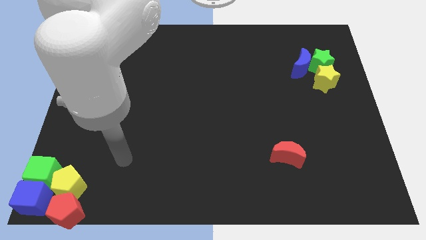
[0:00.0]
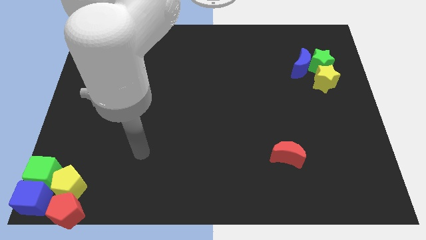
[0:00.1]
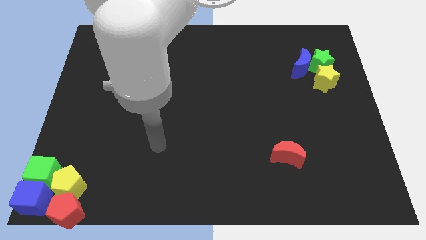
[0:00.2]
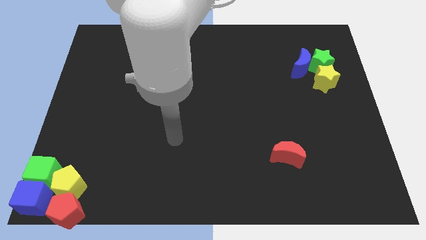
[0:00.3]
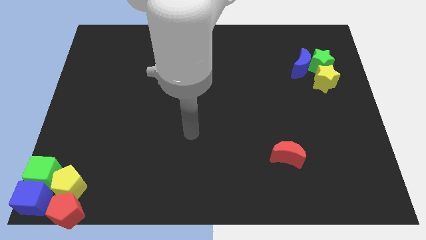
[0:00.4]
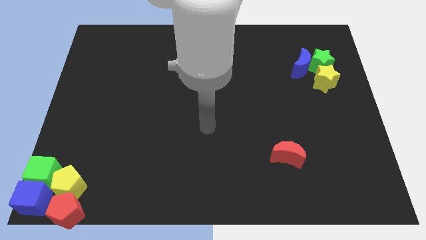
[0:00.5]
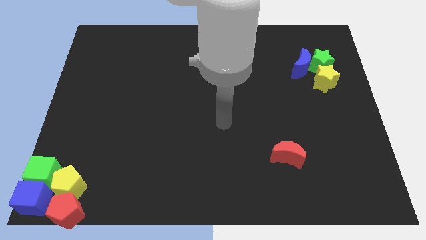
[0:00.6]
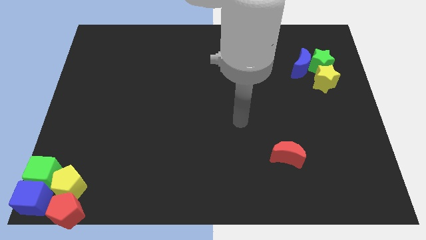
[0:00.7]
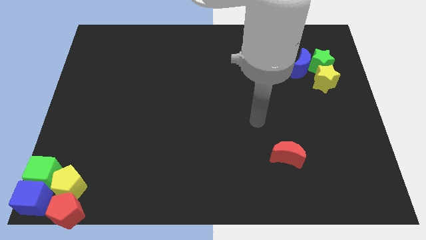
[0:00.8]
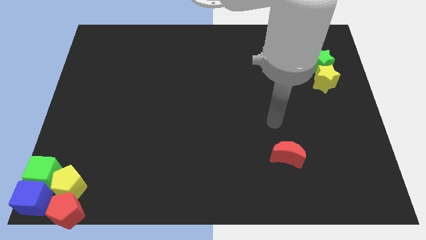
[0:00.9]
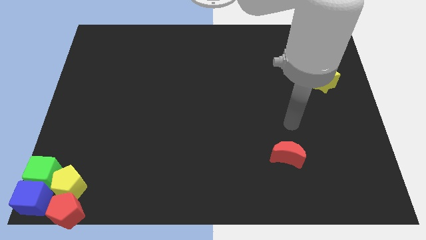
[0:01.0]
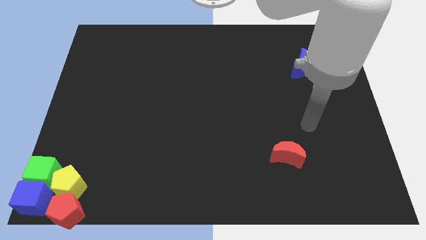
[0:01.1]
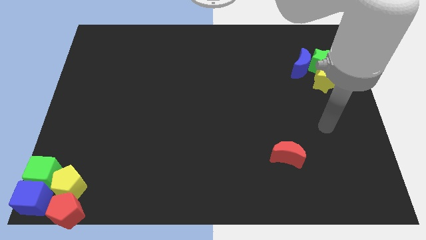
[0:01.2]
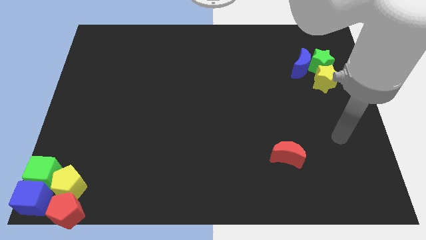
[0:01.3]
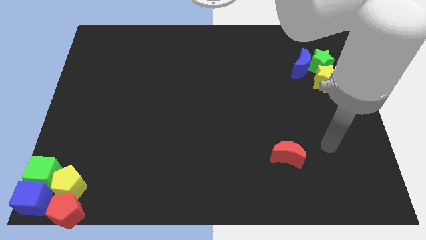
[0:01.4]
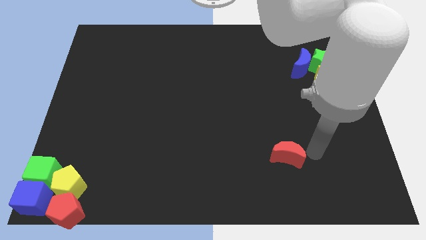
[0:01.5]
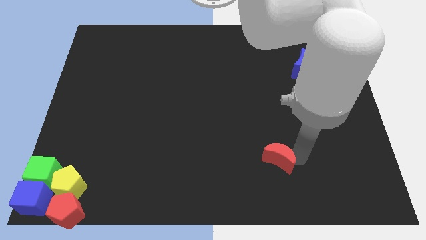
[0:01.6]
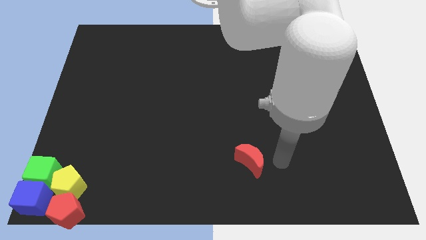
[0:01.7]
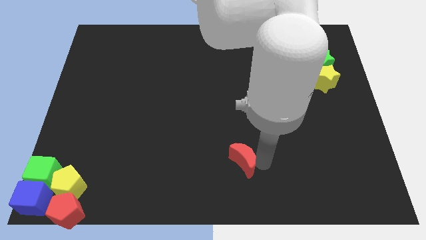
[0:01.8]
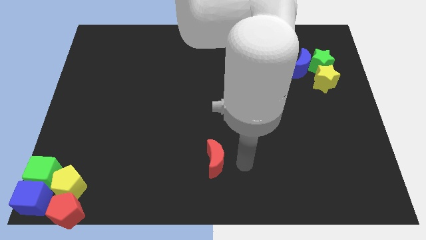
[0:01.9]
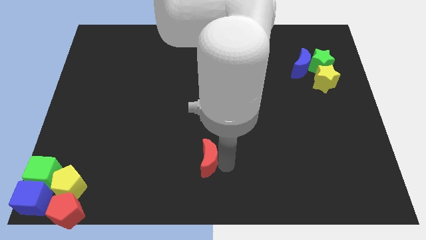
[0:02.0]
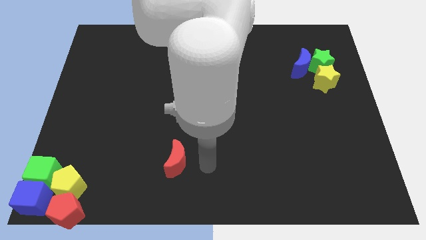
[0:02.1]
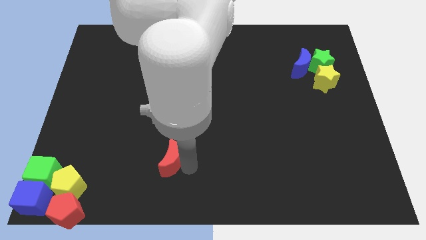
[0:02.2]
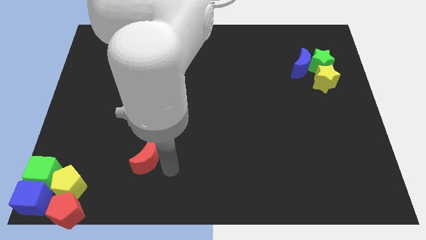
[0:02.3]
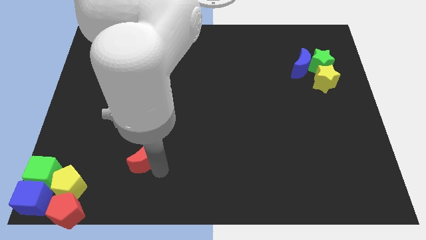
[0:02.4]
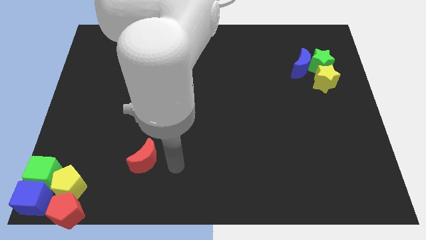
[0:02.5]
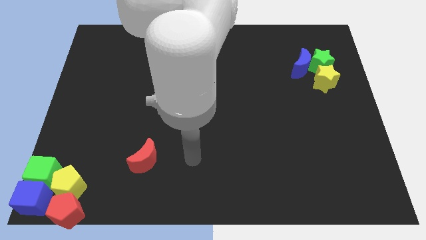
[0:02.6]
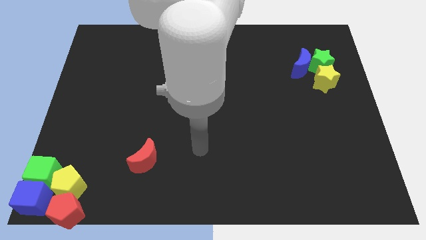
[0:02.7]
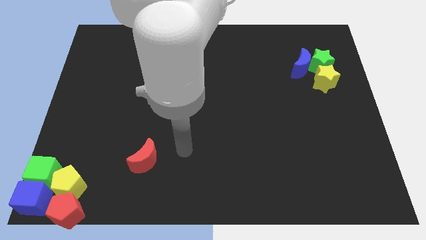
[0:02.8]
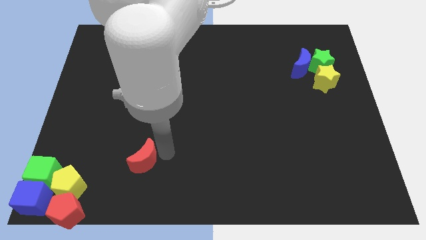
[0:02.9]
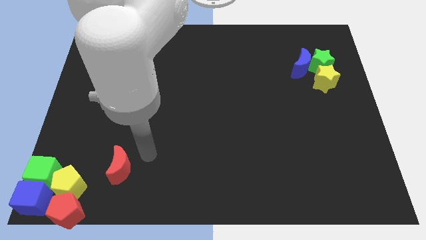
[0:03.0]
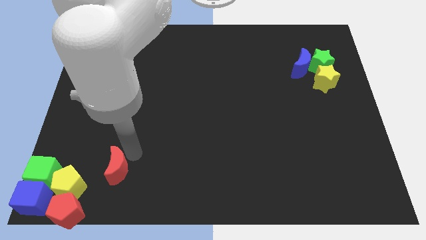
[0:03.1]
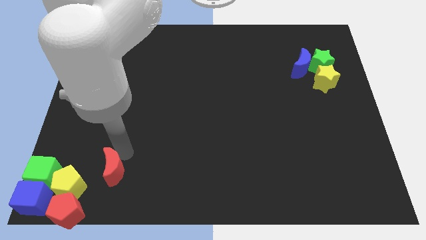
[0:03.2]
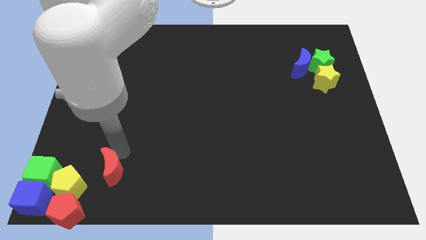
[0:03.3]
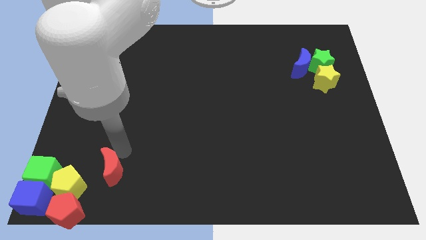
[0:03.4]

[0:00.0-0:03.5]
push the red crescent to the right of the yellow pentagon

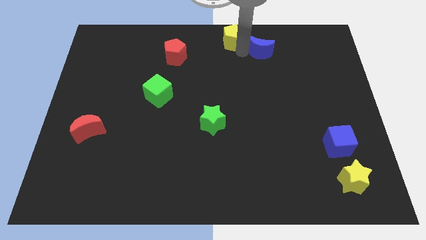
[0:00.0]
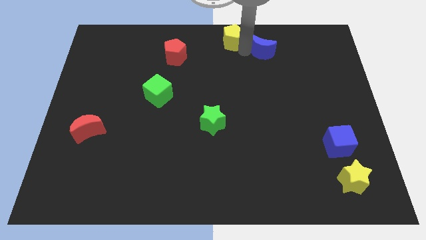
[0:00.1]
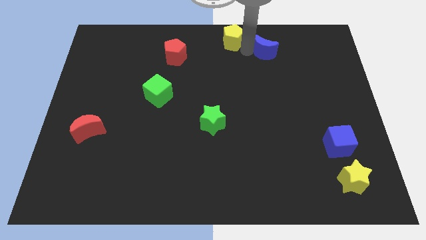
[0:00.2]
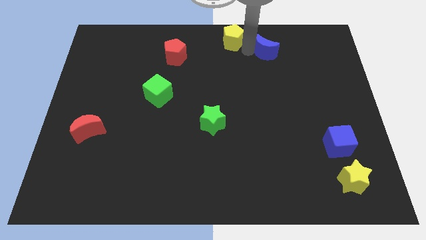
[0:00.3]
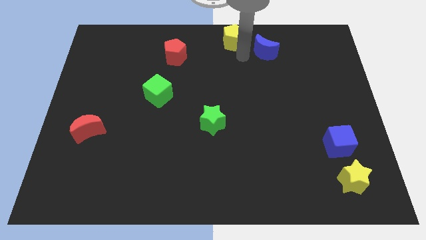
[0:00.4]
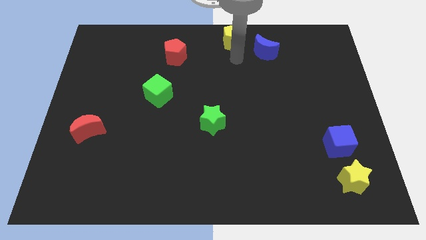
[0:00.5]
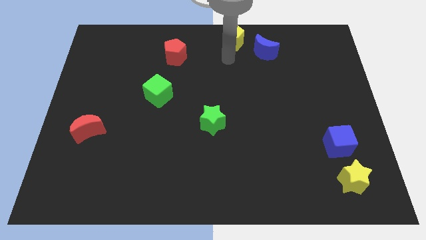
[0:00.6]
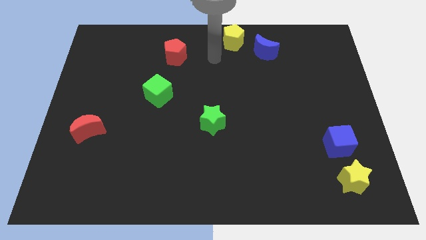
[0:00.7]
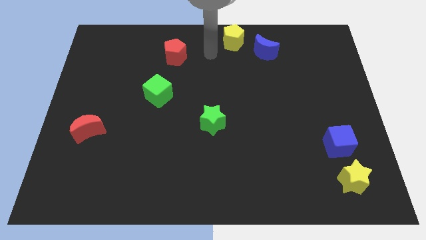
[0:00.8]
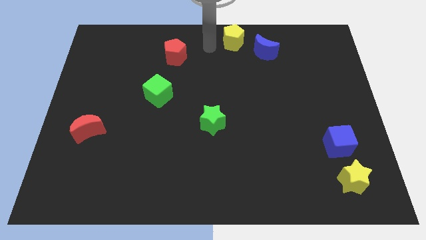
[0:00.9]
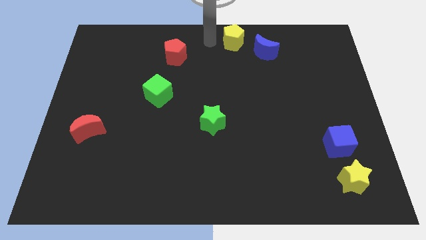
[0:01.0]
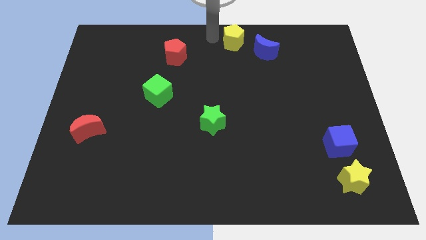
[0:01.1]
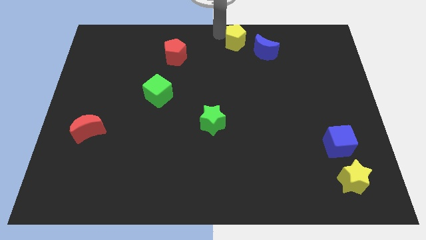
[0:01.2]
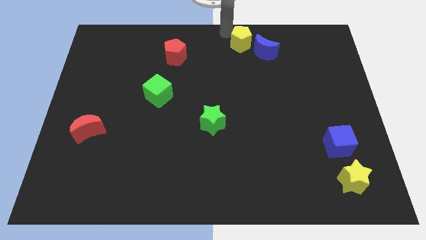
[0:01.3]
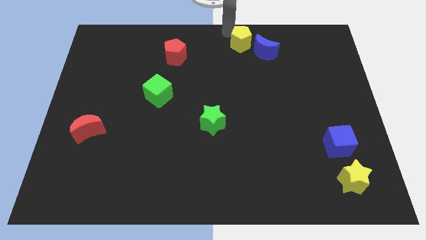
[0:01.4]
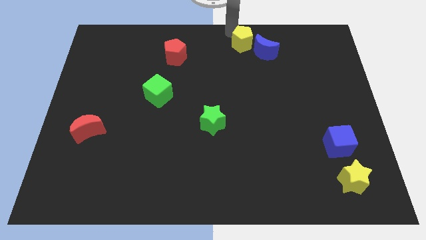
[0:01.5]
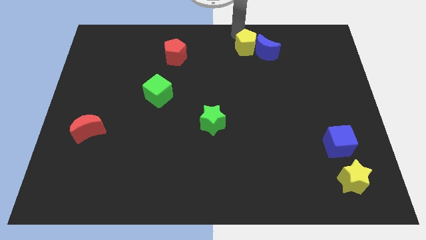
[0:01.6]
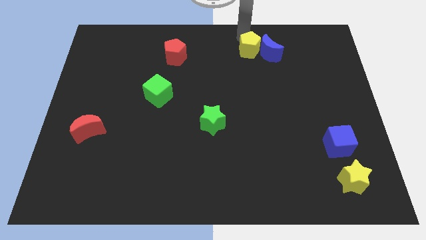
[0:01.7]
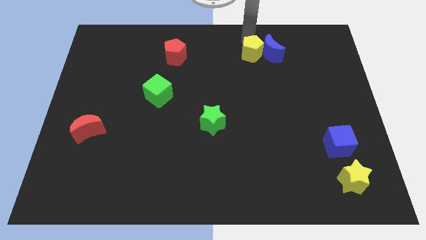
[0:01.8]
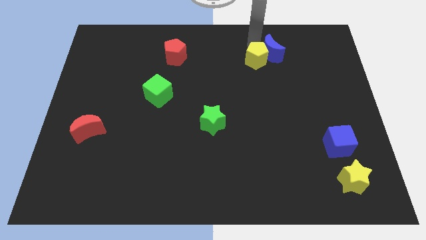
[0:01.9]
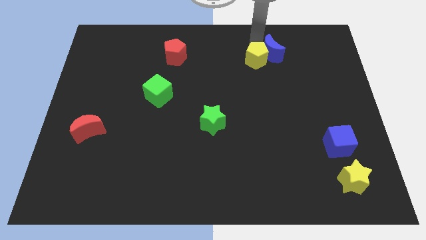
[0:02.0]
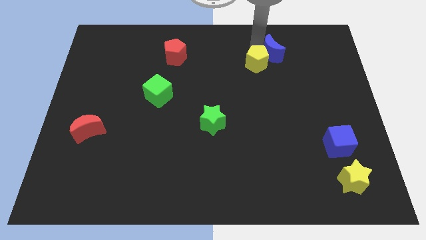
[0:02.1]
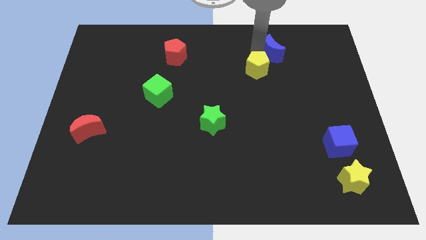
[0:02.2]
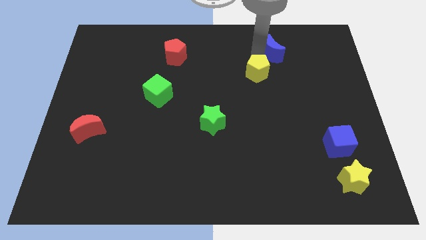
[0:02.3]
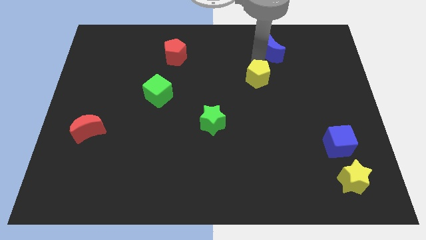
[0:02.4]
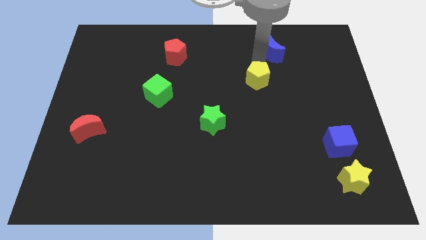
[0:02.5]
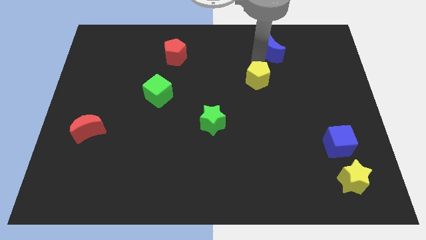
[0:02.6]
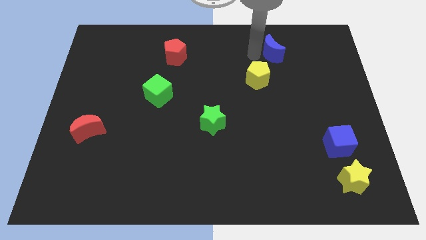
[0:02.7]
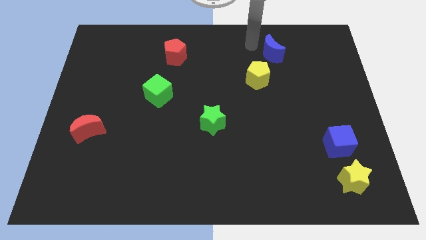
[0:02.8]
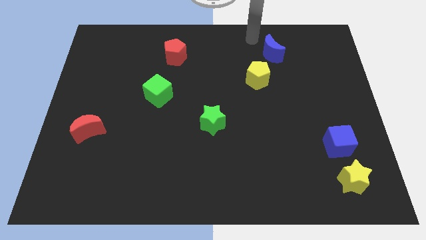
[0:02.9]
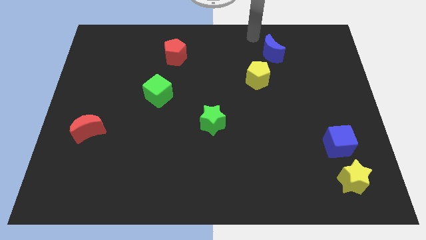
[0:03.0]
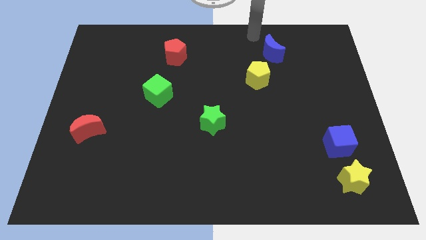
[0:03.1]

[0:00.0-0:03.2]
push yellow pentagon slightly towards down

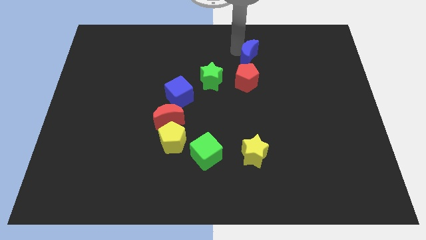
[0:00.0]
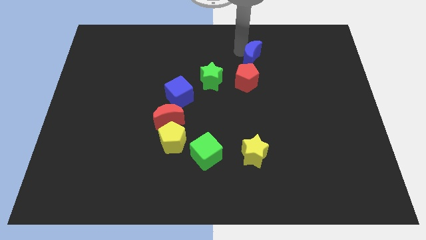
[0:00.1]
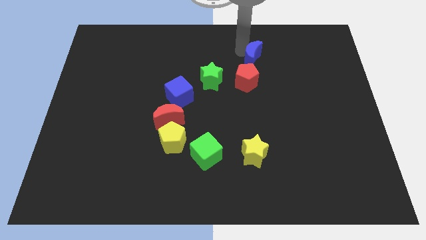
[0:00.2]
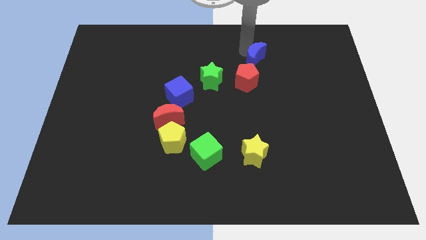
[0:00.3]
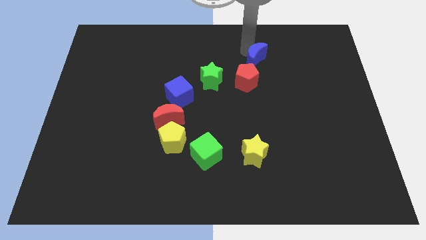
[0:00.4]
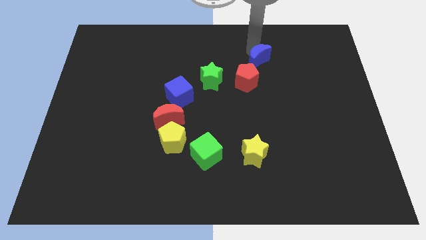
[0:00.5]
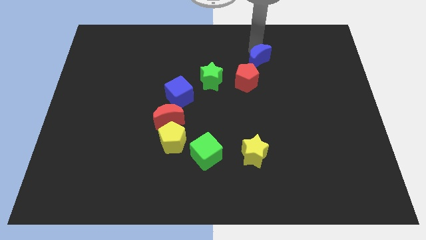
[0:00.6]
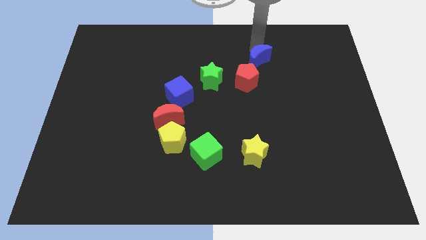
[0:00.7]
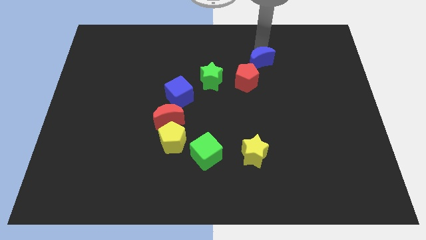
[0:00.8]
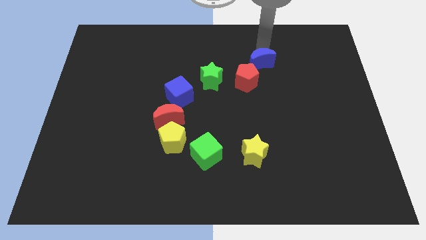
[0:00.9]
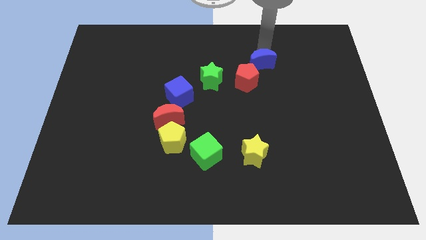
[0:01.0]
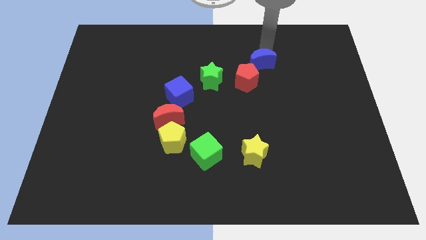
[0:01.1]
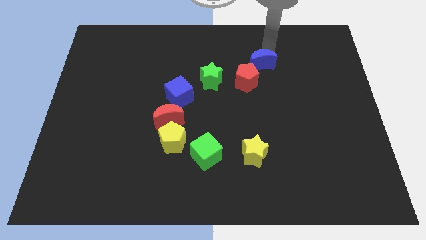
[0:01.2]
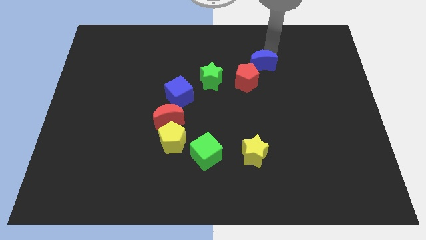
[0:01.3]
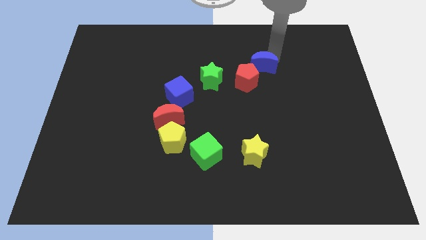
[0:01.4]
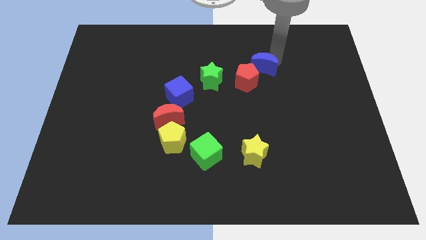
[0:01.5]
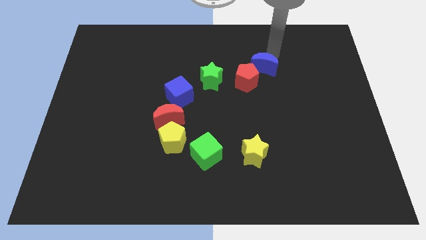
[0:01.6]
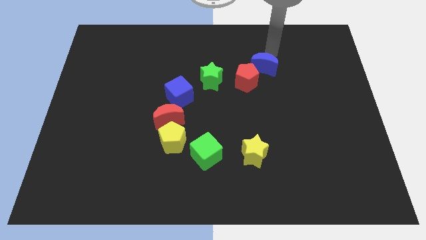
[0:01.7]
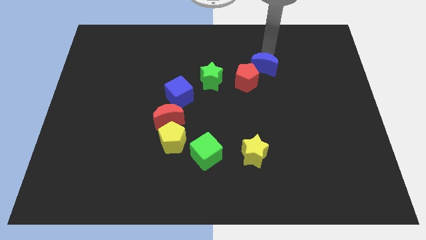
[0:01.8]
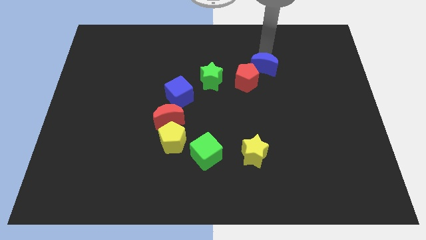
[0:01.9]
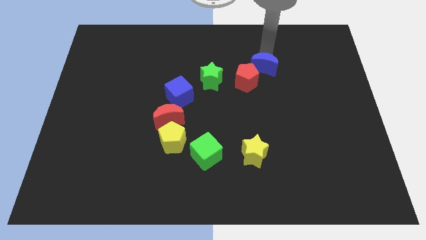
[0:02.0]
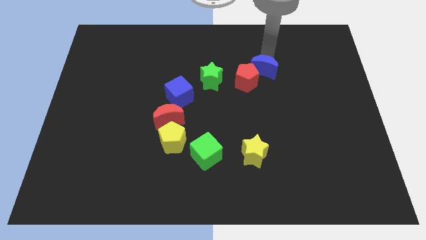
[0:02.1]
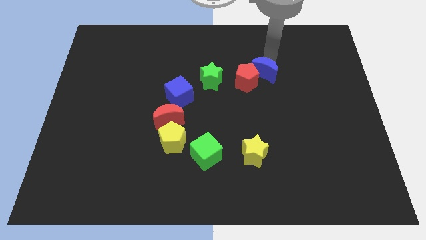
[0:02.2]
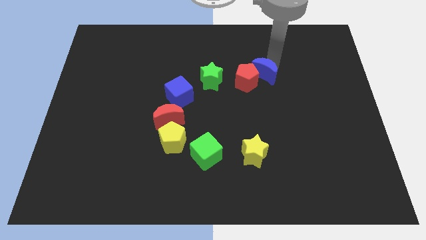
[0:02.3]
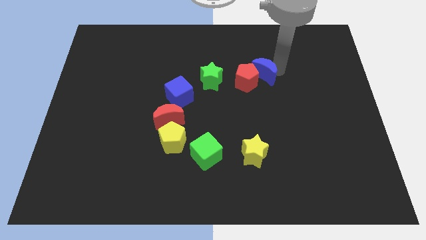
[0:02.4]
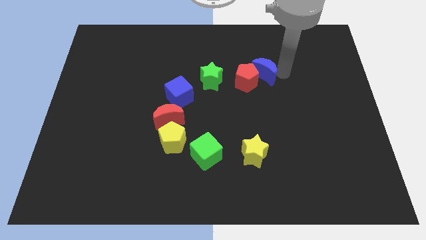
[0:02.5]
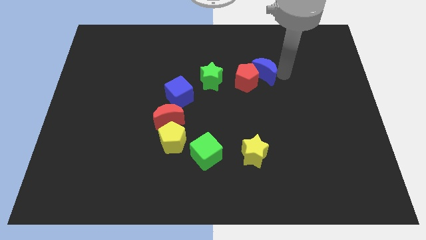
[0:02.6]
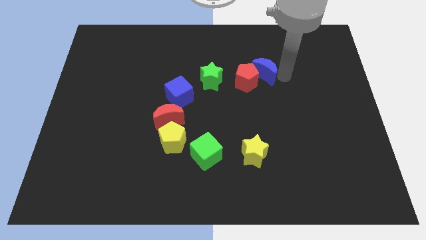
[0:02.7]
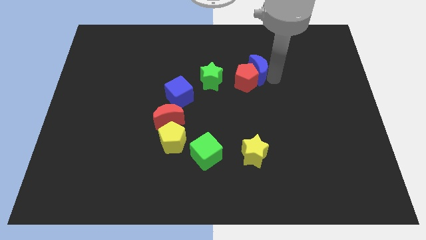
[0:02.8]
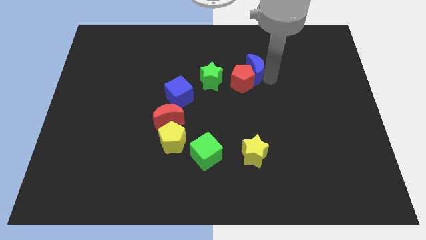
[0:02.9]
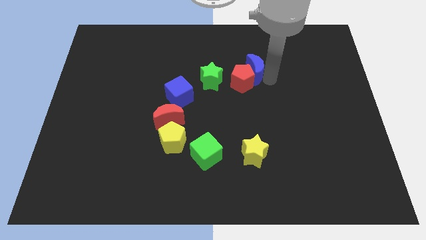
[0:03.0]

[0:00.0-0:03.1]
drag the blue moon into the right side of the red pentagon
